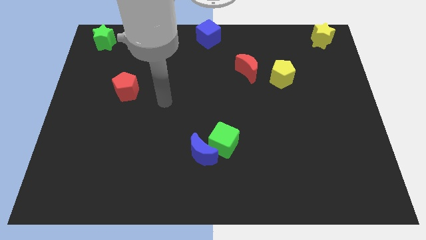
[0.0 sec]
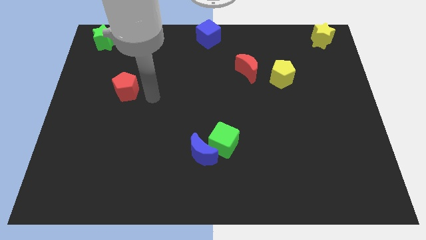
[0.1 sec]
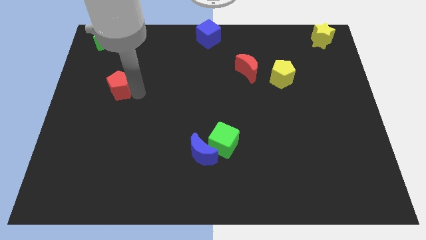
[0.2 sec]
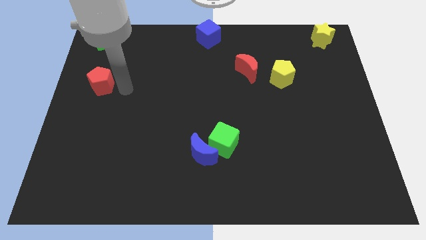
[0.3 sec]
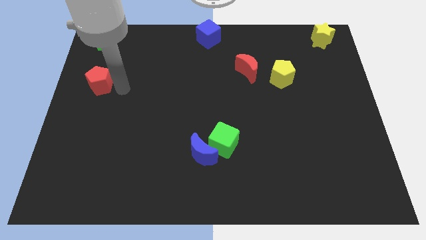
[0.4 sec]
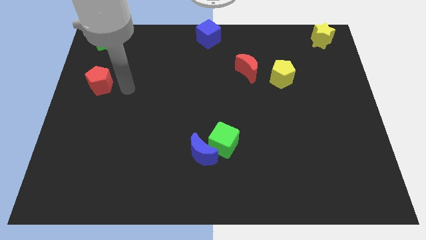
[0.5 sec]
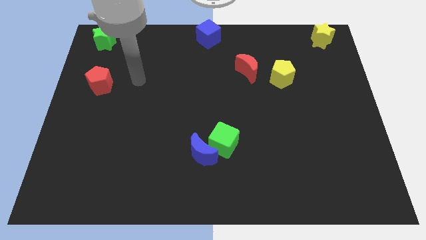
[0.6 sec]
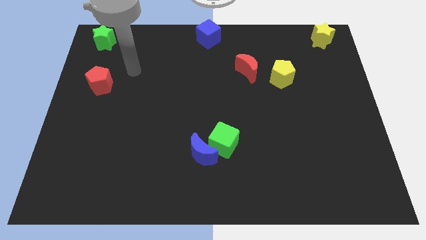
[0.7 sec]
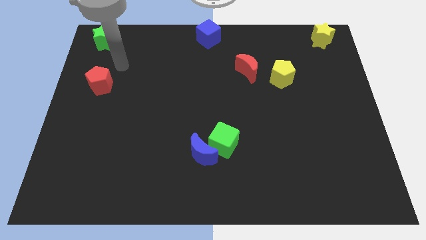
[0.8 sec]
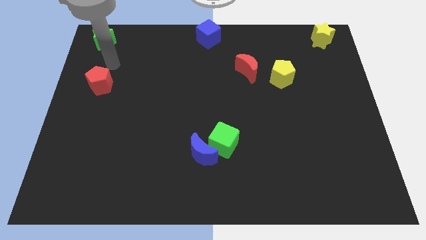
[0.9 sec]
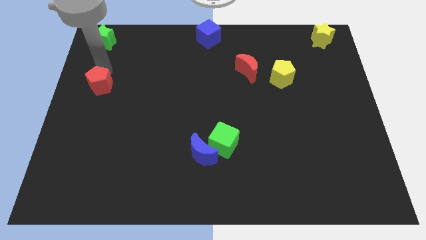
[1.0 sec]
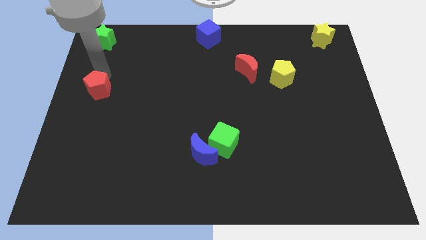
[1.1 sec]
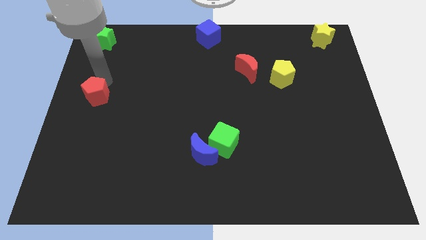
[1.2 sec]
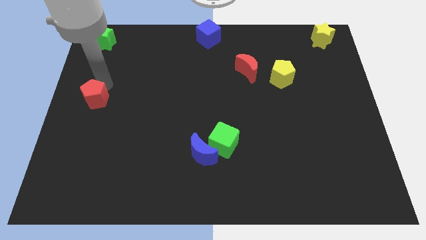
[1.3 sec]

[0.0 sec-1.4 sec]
place the red pentagon vertically below the green star

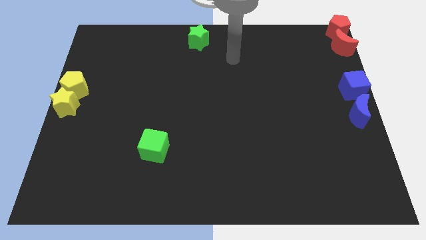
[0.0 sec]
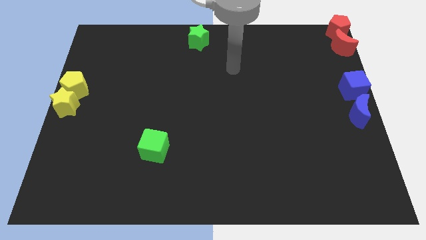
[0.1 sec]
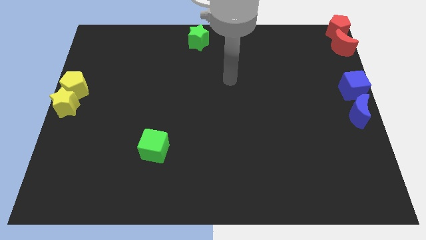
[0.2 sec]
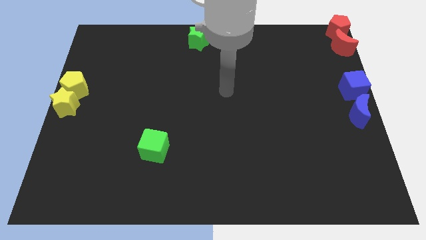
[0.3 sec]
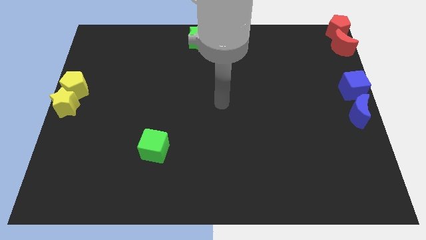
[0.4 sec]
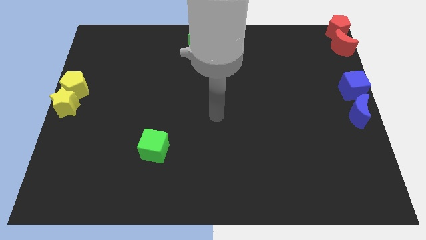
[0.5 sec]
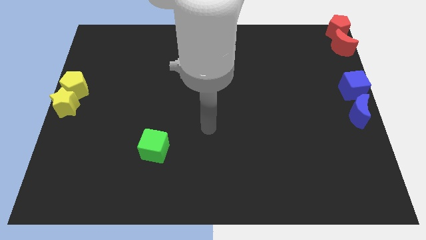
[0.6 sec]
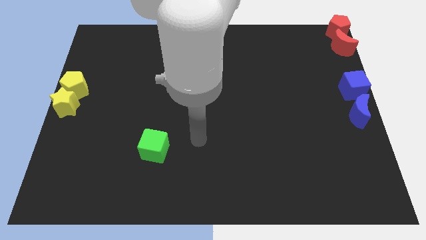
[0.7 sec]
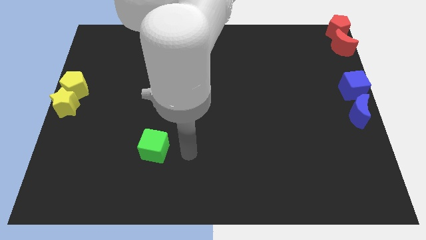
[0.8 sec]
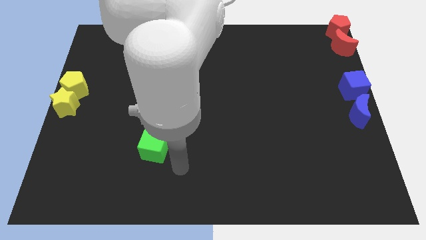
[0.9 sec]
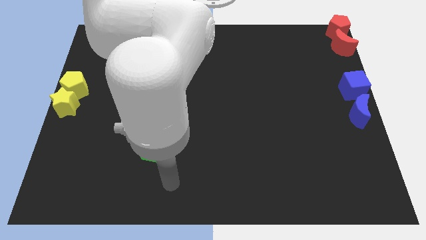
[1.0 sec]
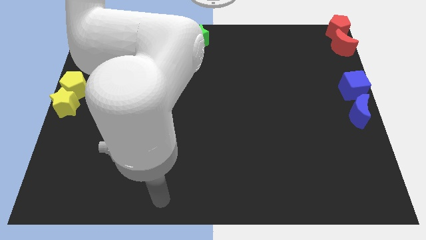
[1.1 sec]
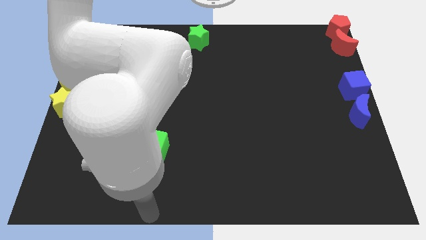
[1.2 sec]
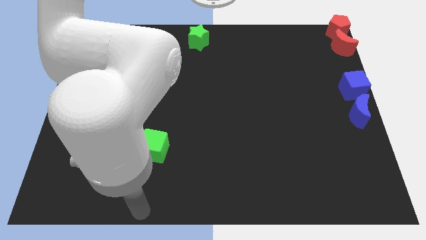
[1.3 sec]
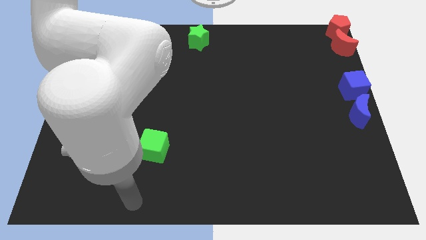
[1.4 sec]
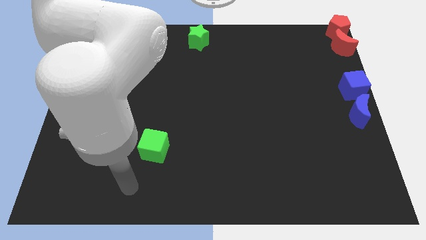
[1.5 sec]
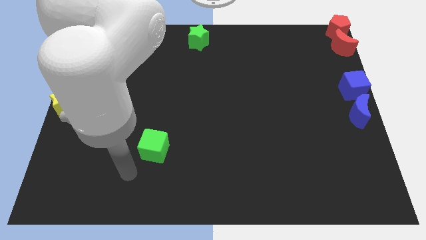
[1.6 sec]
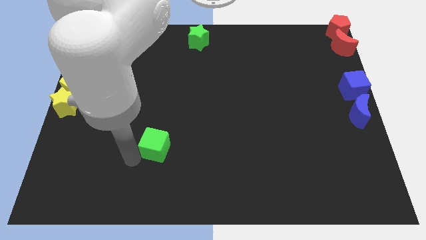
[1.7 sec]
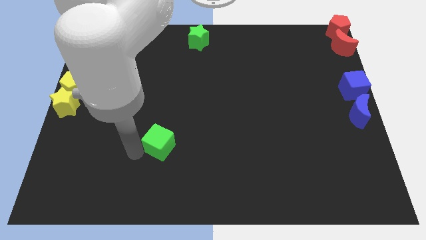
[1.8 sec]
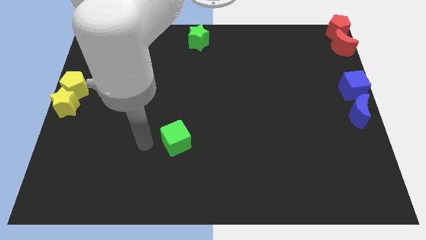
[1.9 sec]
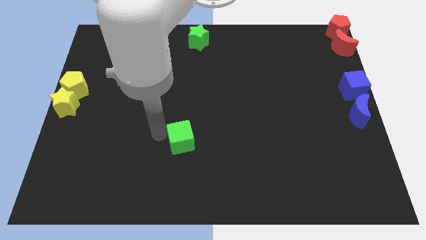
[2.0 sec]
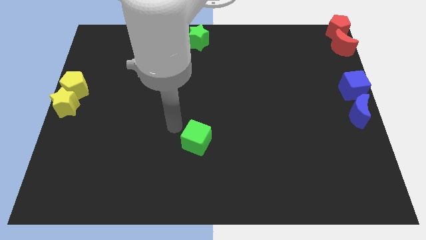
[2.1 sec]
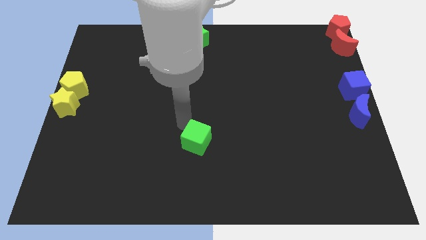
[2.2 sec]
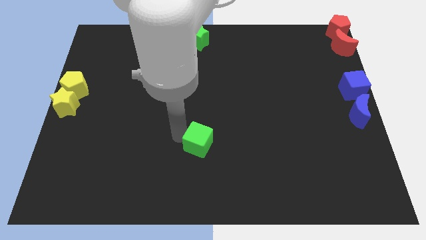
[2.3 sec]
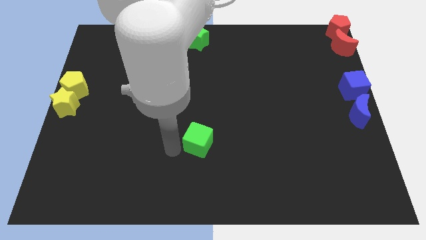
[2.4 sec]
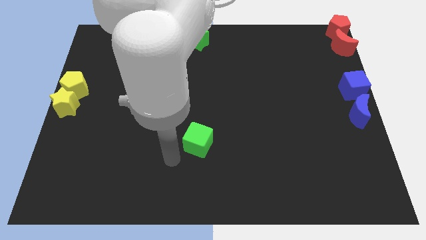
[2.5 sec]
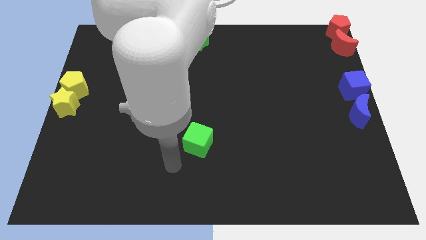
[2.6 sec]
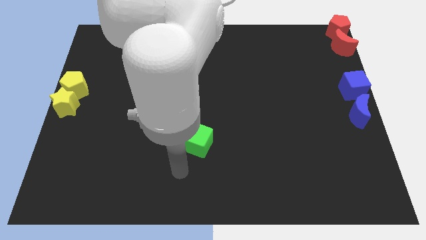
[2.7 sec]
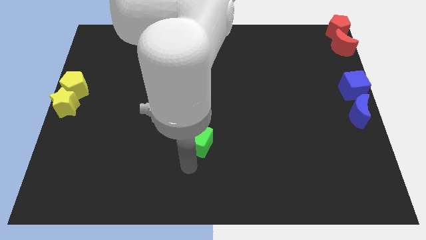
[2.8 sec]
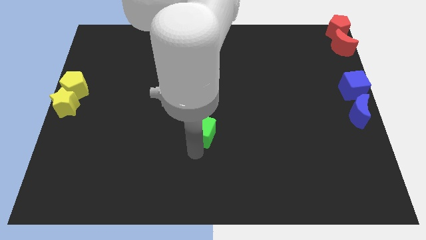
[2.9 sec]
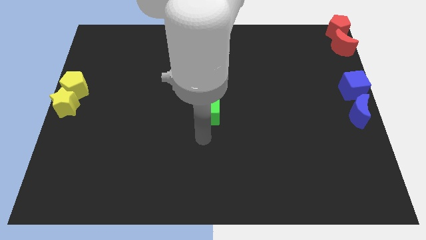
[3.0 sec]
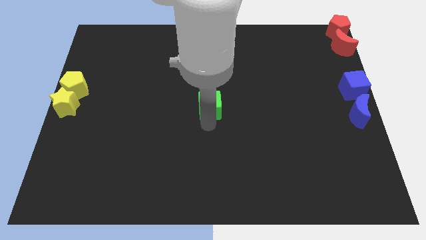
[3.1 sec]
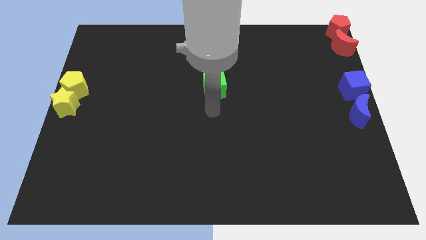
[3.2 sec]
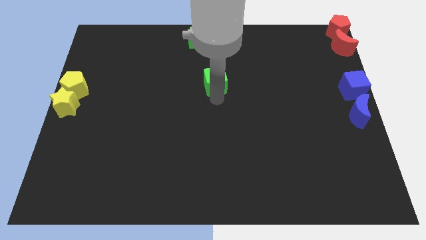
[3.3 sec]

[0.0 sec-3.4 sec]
move the green cube to the center of the board

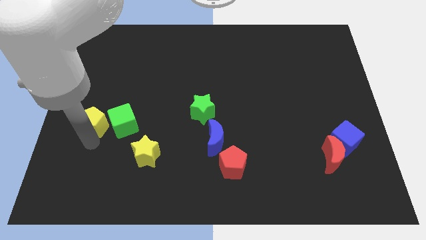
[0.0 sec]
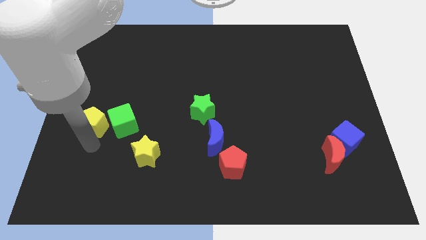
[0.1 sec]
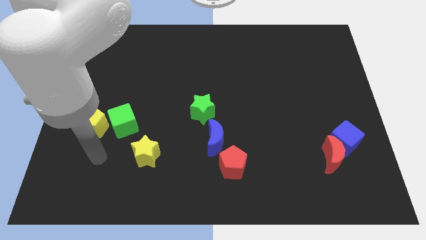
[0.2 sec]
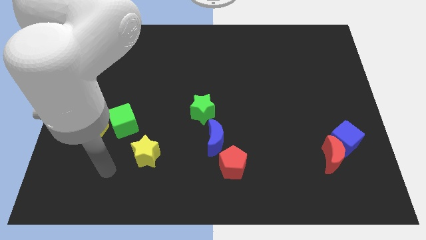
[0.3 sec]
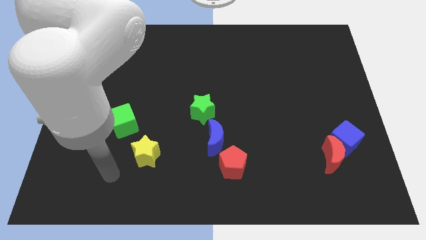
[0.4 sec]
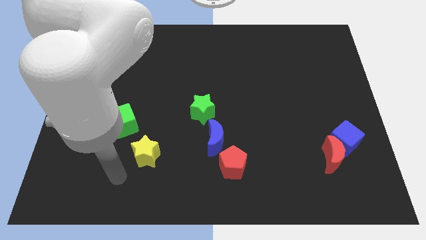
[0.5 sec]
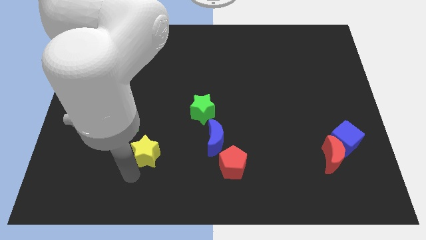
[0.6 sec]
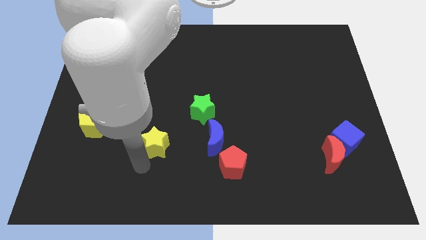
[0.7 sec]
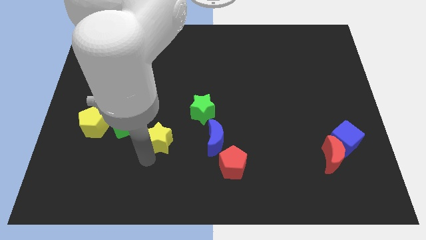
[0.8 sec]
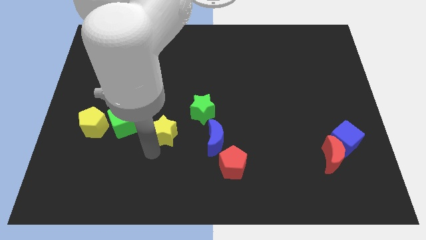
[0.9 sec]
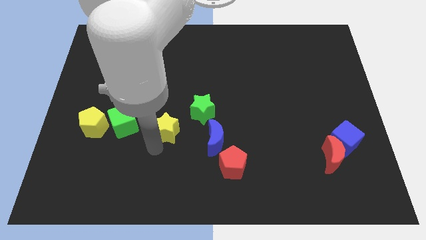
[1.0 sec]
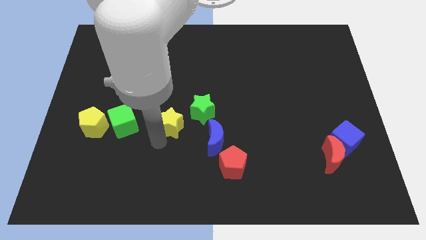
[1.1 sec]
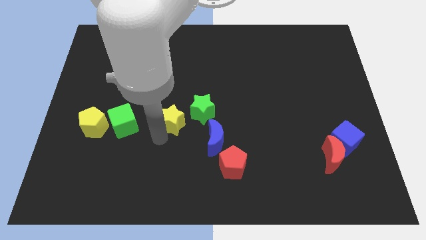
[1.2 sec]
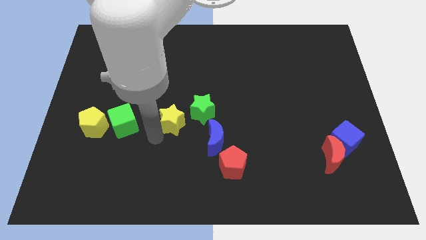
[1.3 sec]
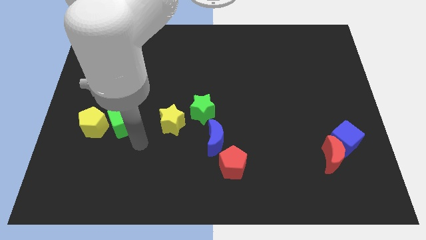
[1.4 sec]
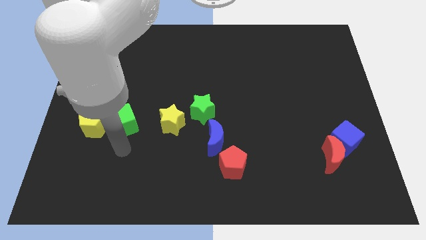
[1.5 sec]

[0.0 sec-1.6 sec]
move the yellow star in between green star and green cube

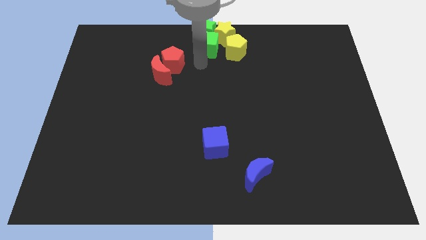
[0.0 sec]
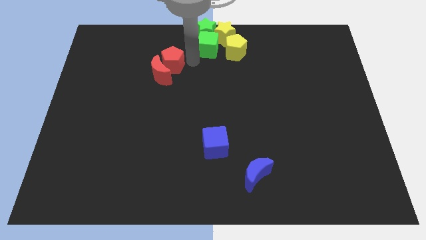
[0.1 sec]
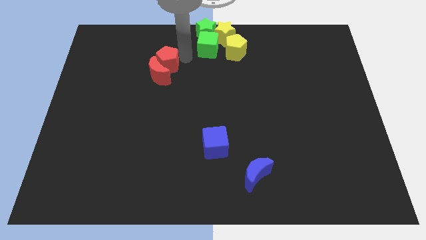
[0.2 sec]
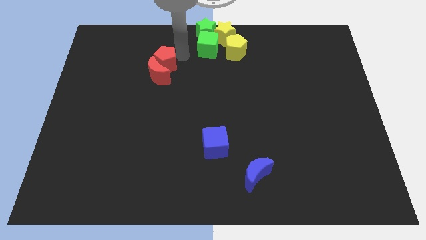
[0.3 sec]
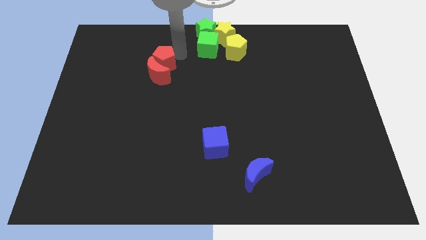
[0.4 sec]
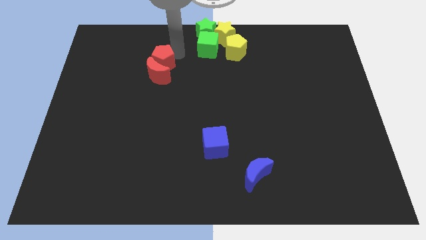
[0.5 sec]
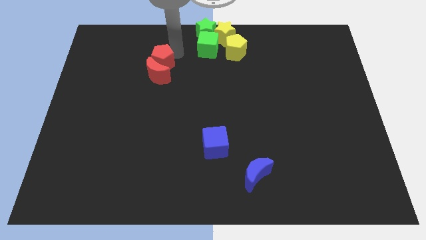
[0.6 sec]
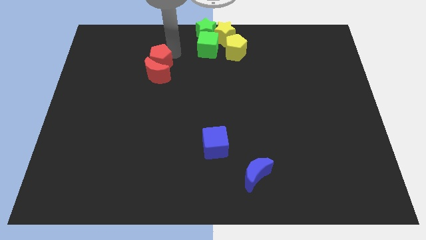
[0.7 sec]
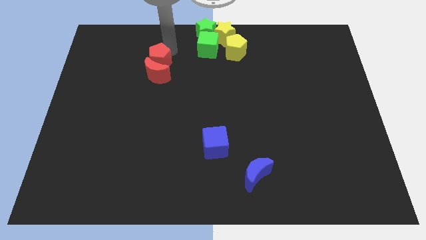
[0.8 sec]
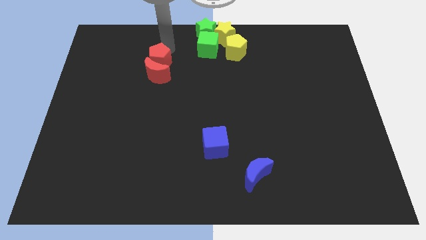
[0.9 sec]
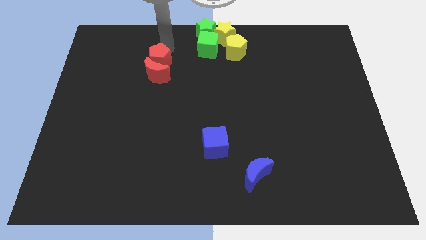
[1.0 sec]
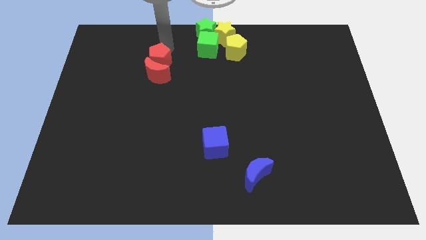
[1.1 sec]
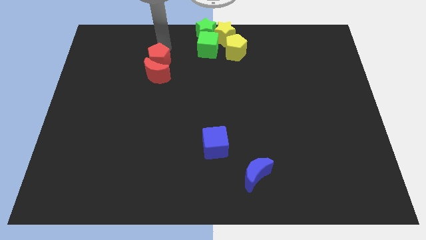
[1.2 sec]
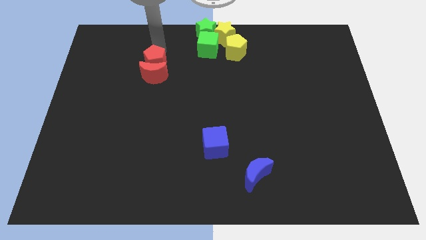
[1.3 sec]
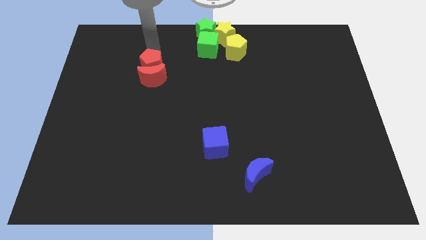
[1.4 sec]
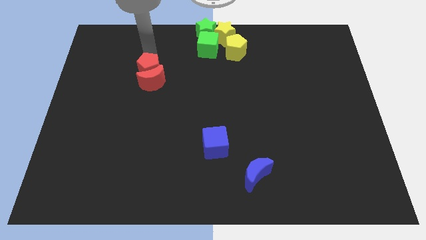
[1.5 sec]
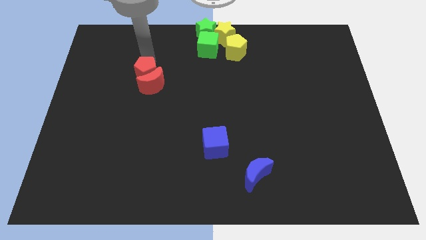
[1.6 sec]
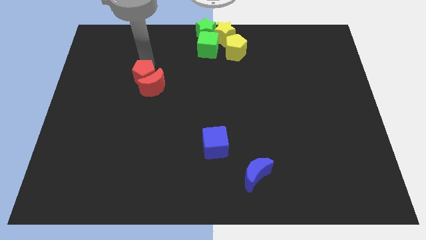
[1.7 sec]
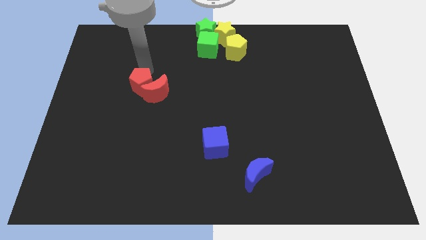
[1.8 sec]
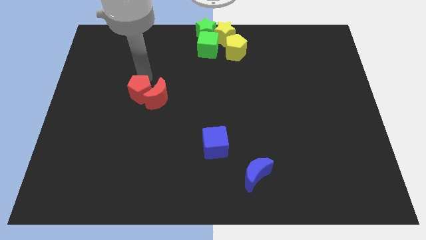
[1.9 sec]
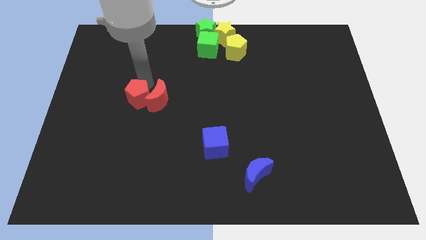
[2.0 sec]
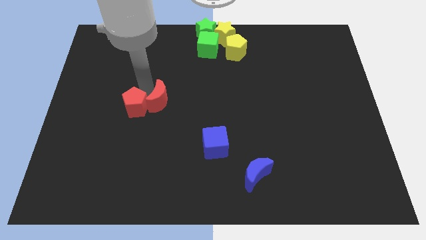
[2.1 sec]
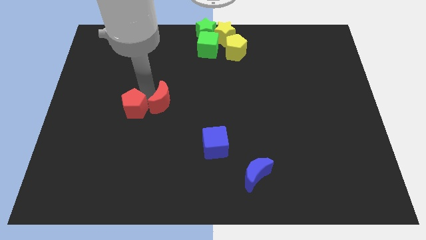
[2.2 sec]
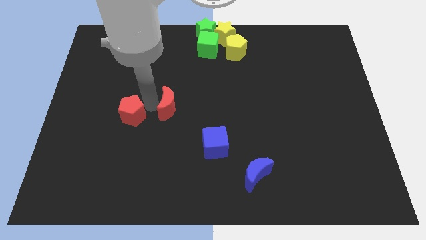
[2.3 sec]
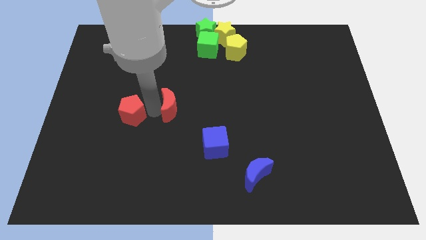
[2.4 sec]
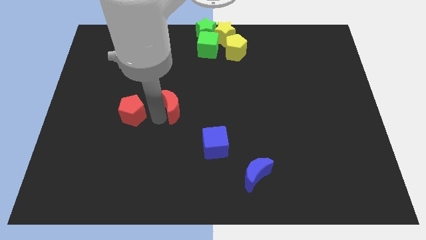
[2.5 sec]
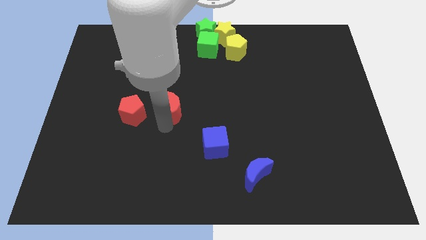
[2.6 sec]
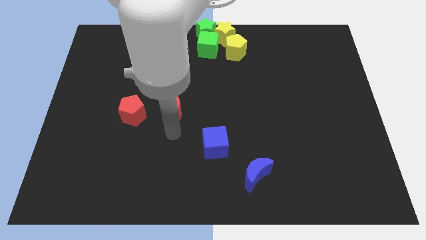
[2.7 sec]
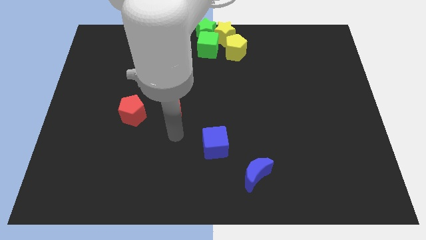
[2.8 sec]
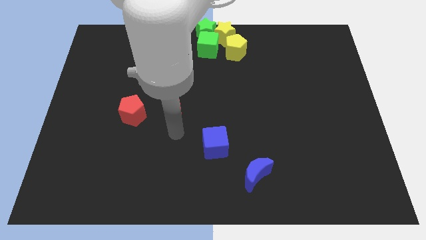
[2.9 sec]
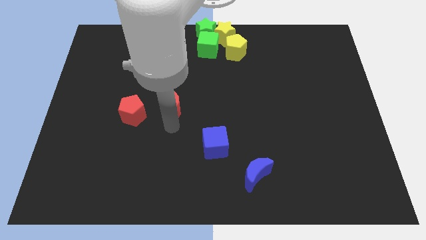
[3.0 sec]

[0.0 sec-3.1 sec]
push the red blocks towards the bottom side of the board
